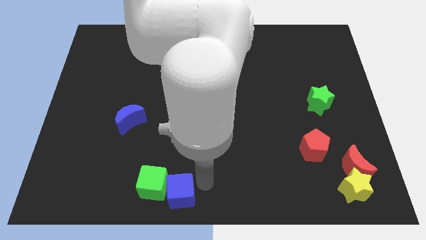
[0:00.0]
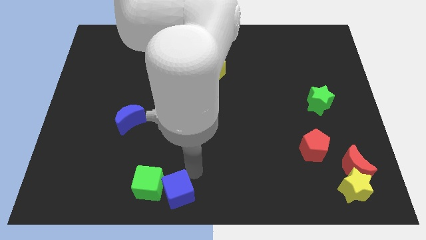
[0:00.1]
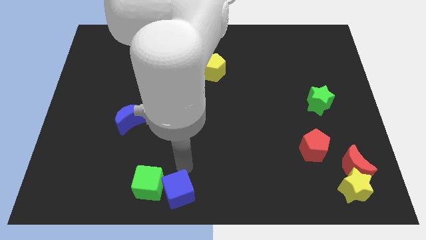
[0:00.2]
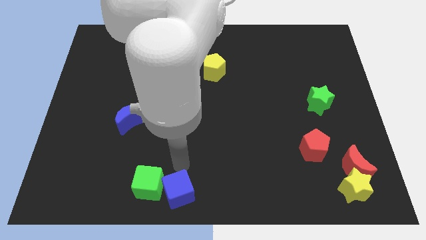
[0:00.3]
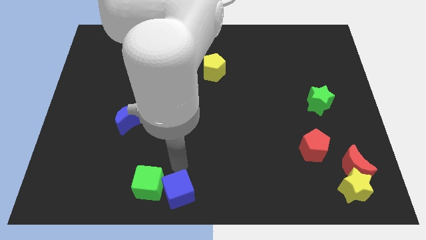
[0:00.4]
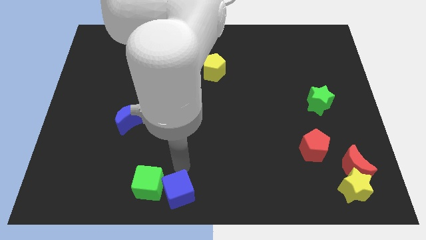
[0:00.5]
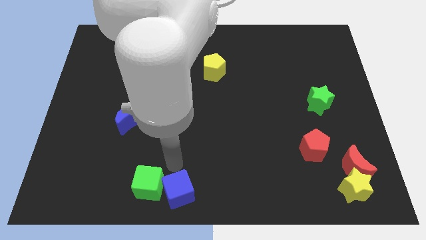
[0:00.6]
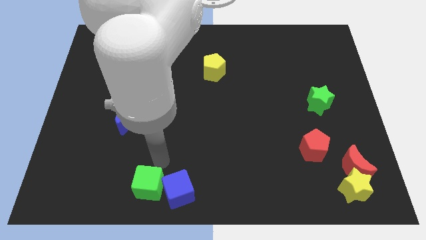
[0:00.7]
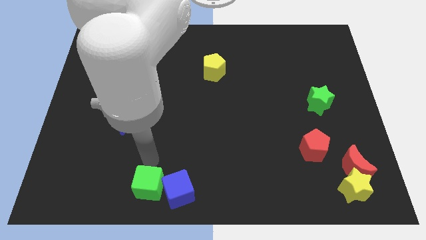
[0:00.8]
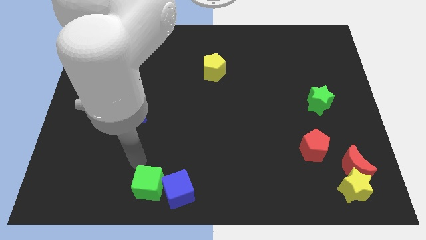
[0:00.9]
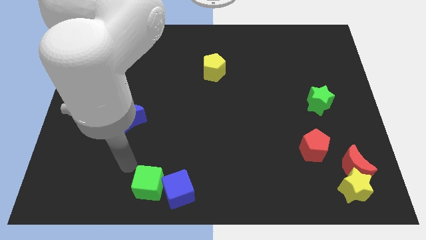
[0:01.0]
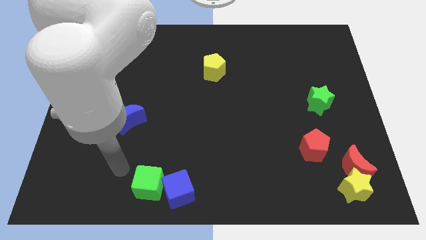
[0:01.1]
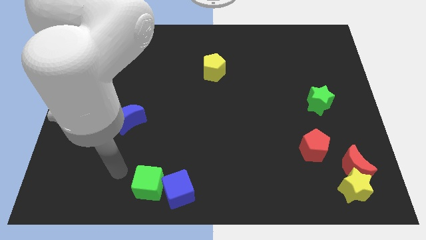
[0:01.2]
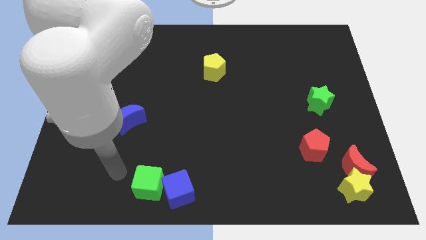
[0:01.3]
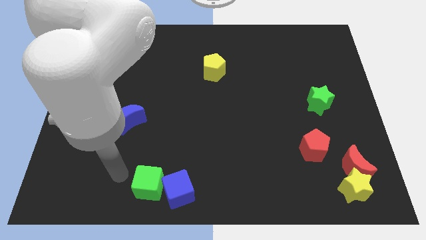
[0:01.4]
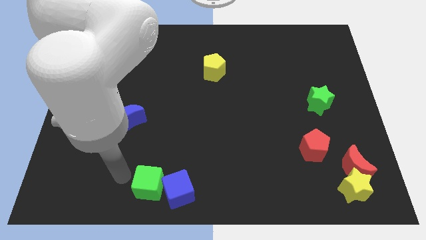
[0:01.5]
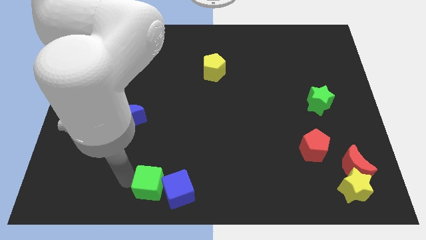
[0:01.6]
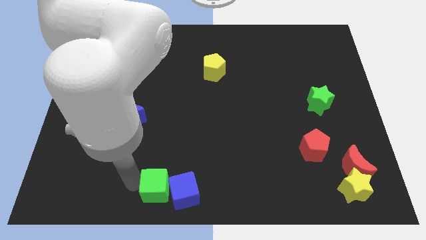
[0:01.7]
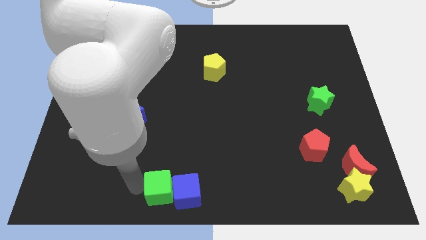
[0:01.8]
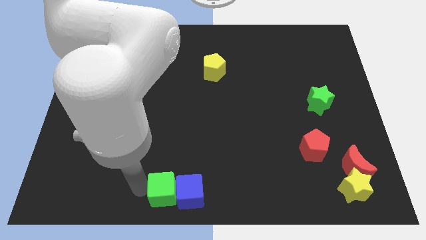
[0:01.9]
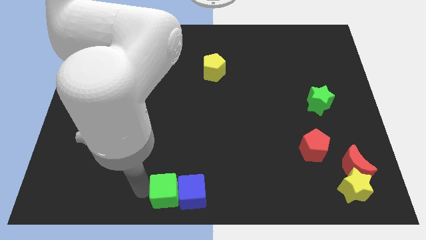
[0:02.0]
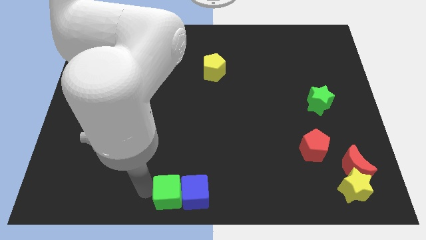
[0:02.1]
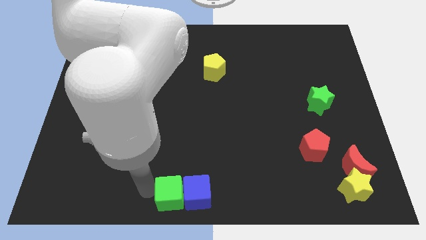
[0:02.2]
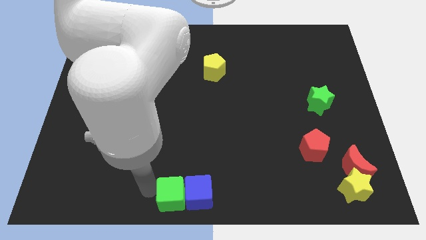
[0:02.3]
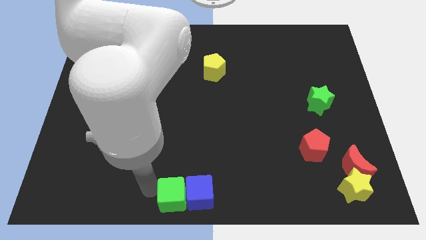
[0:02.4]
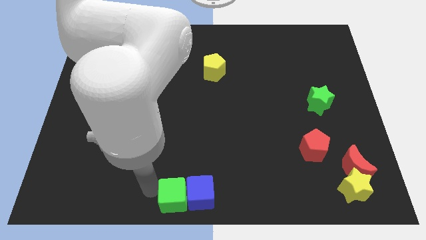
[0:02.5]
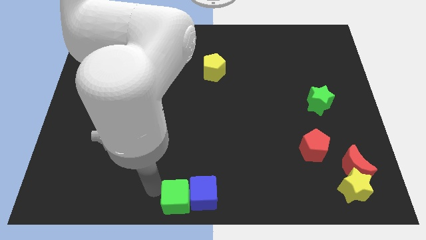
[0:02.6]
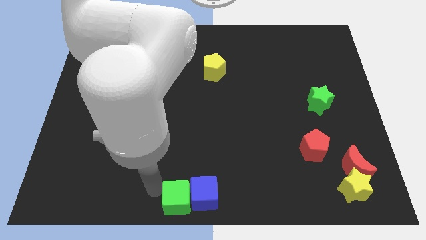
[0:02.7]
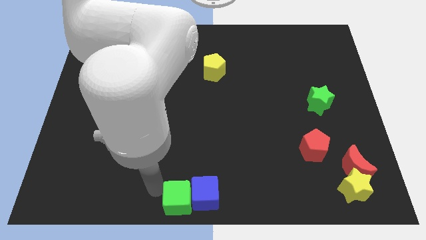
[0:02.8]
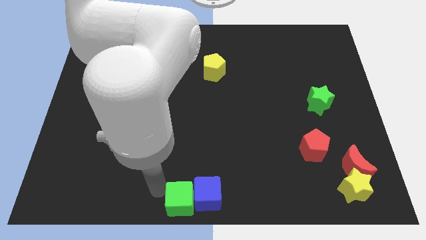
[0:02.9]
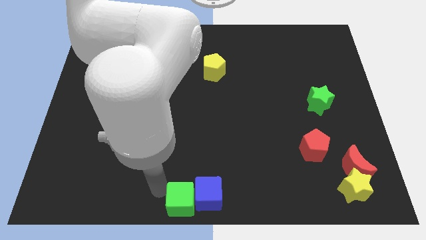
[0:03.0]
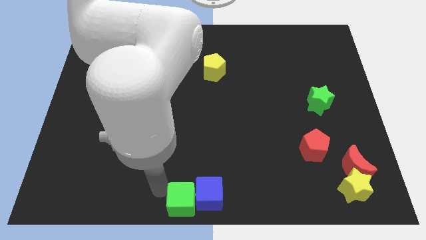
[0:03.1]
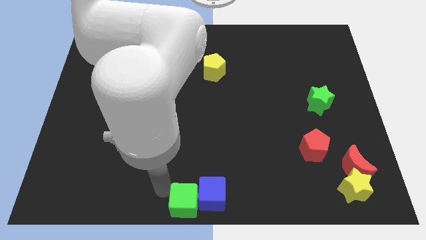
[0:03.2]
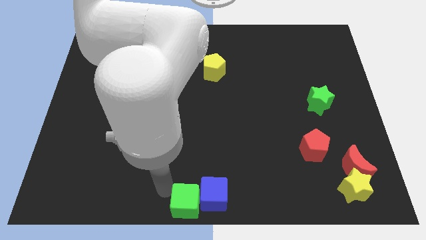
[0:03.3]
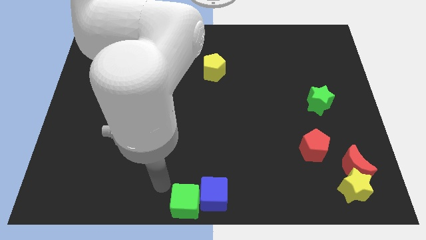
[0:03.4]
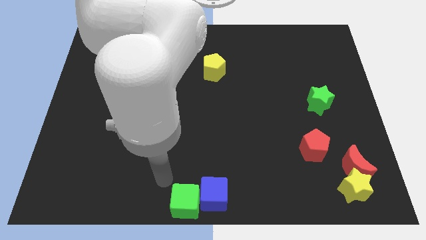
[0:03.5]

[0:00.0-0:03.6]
place green cube and blue cube at the bottom center

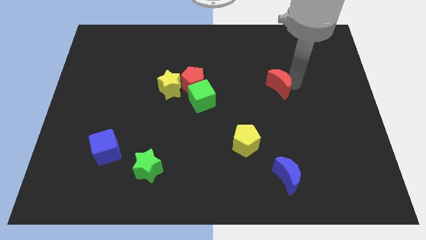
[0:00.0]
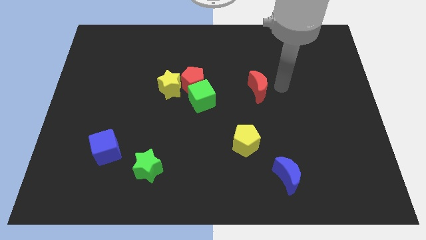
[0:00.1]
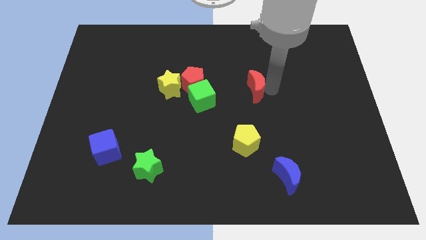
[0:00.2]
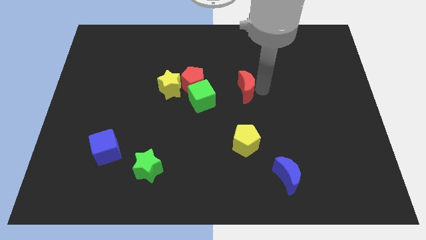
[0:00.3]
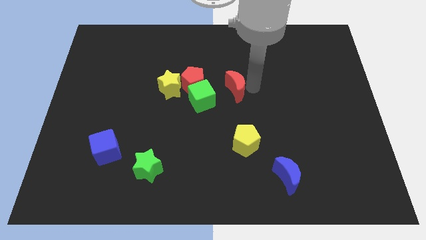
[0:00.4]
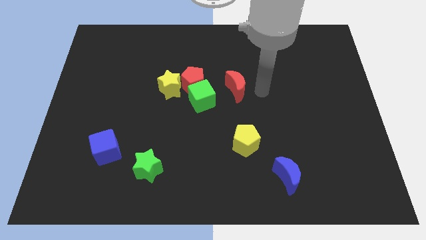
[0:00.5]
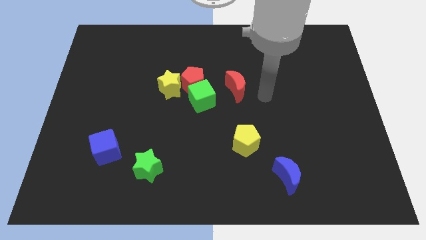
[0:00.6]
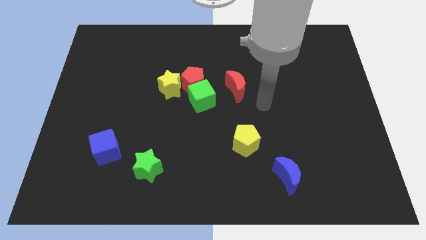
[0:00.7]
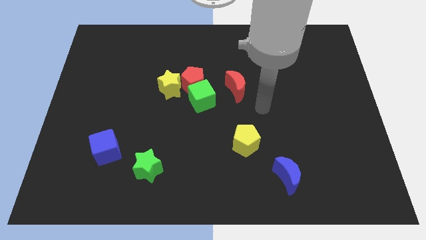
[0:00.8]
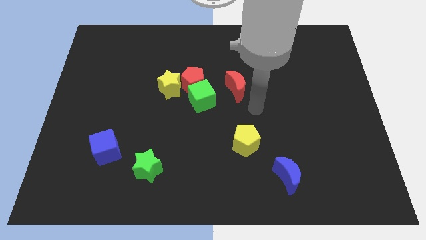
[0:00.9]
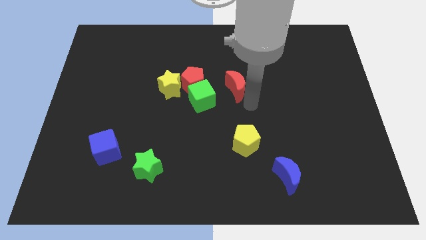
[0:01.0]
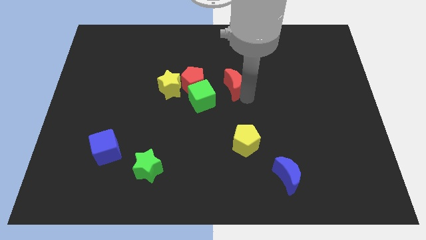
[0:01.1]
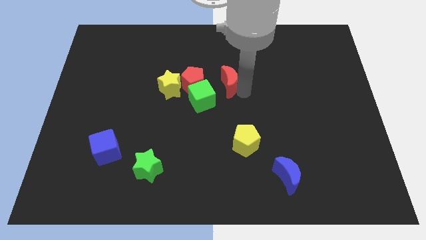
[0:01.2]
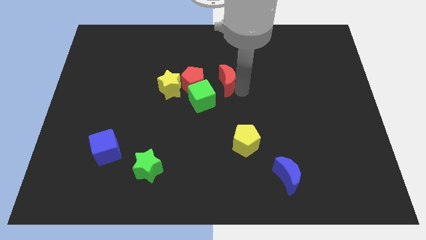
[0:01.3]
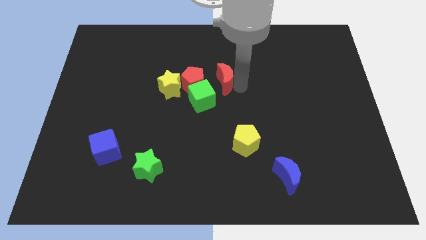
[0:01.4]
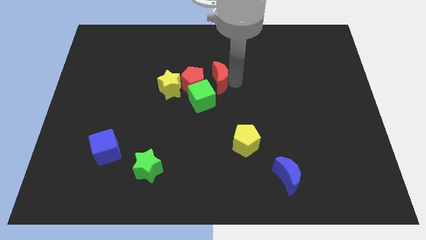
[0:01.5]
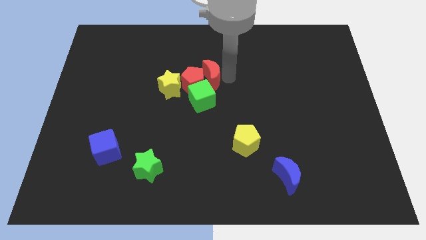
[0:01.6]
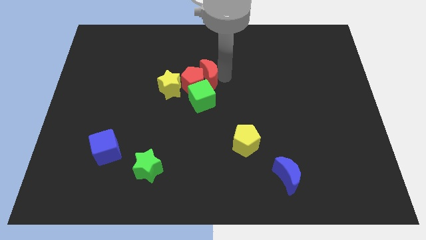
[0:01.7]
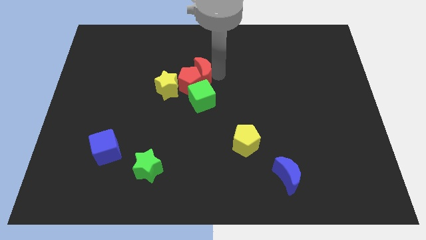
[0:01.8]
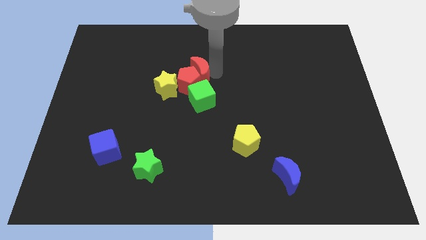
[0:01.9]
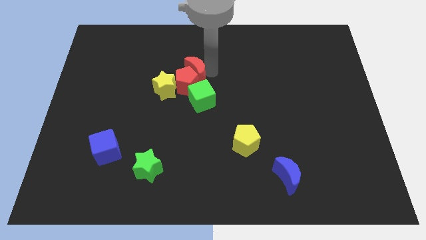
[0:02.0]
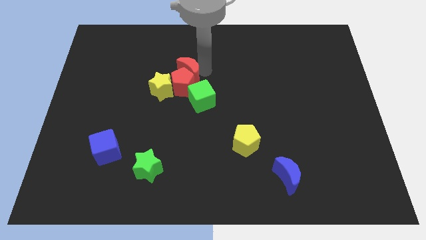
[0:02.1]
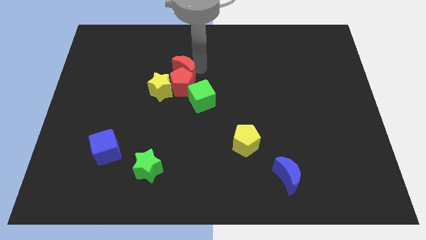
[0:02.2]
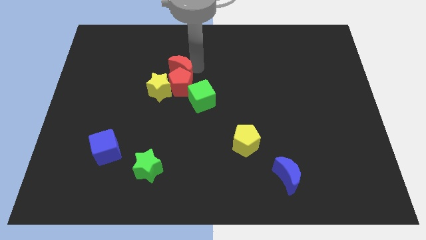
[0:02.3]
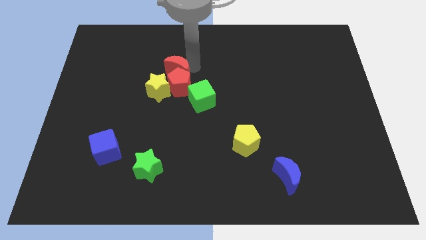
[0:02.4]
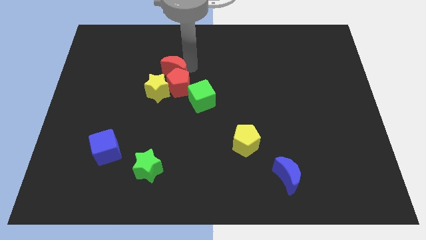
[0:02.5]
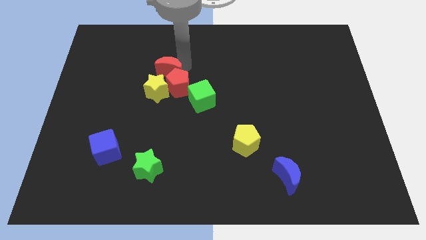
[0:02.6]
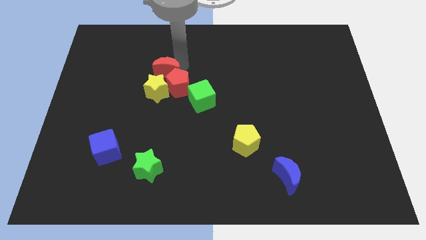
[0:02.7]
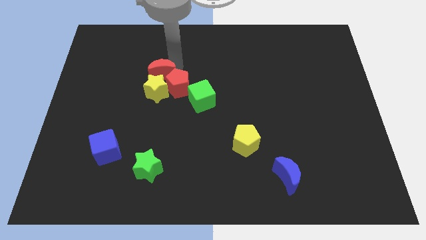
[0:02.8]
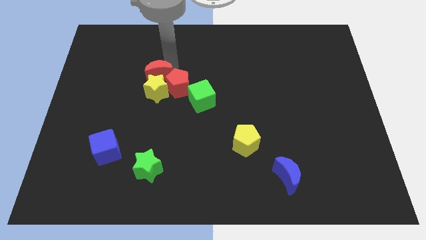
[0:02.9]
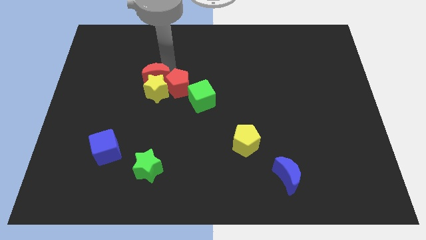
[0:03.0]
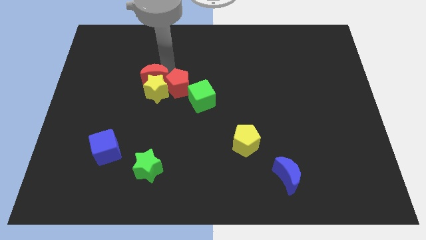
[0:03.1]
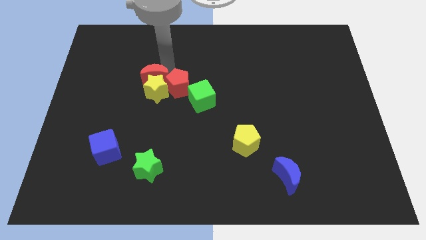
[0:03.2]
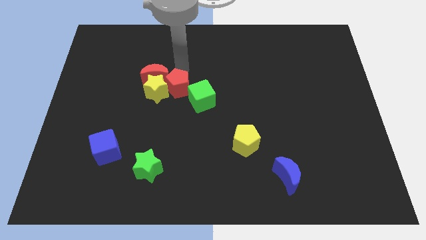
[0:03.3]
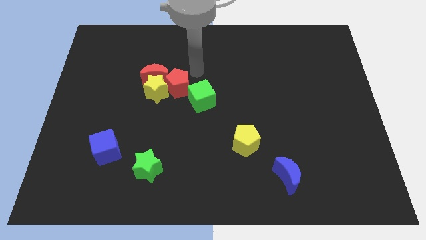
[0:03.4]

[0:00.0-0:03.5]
move the red moon above the yellow star

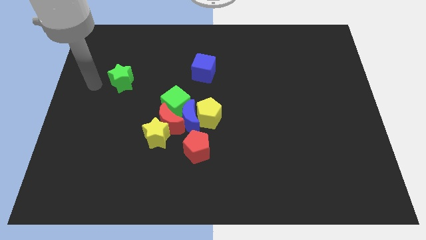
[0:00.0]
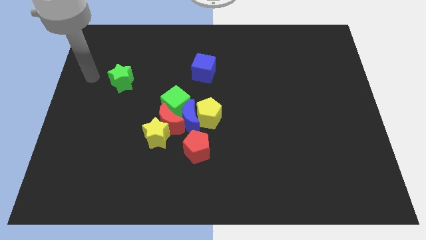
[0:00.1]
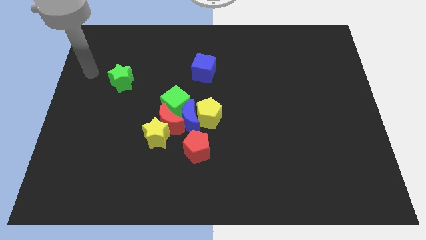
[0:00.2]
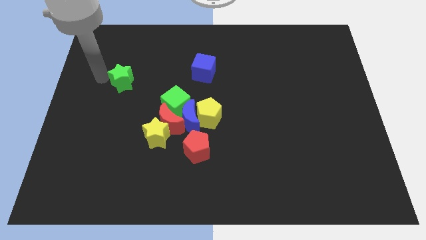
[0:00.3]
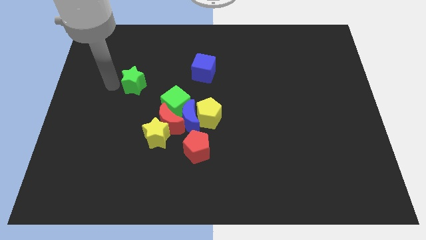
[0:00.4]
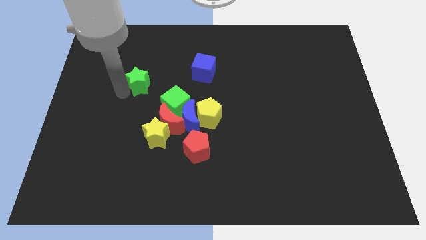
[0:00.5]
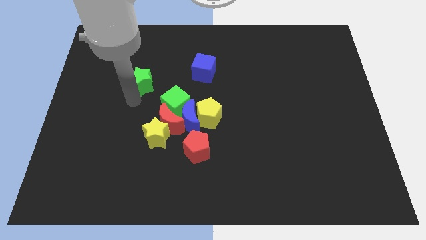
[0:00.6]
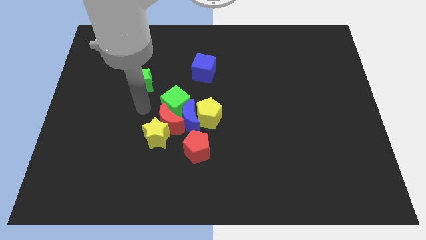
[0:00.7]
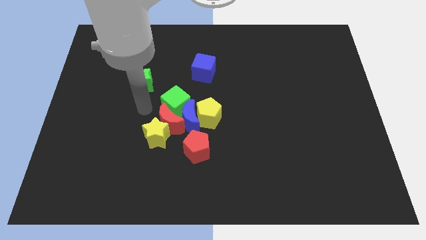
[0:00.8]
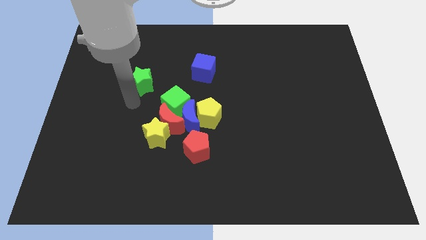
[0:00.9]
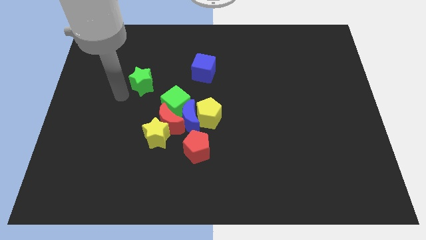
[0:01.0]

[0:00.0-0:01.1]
push the green star towards green cube

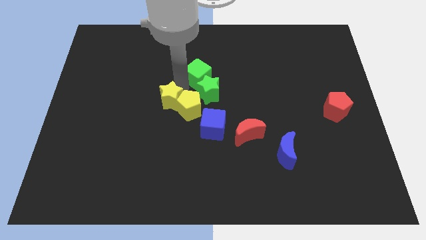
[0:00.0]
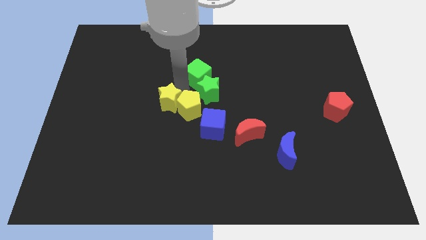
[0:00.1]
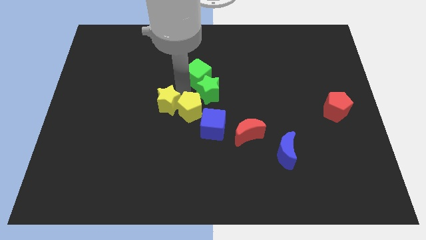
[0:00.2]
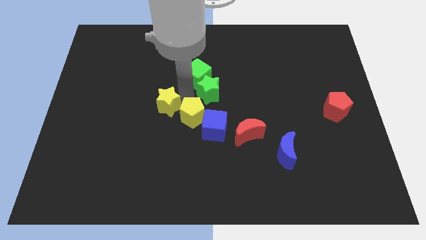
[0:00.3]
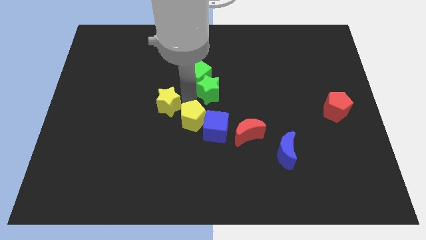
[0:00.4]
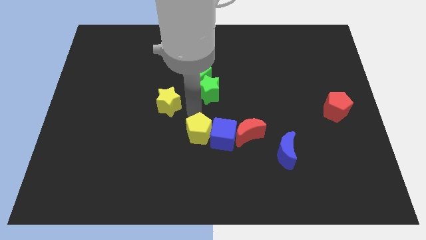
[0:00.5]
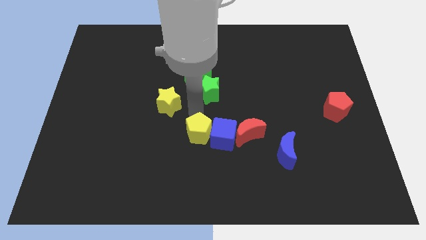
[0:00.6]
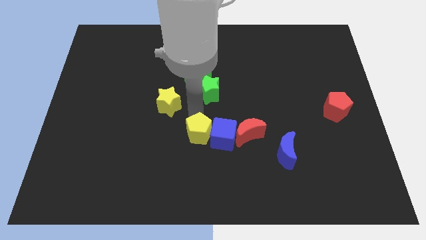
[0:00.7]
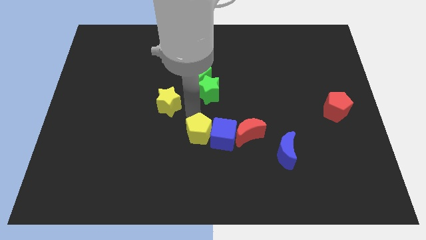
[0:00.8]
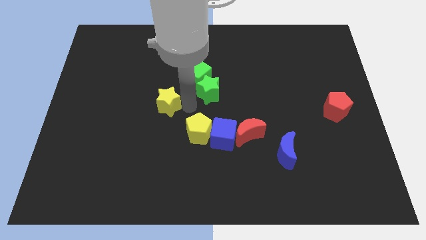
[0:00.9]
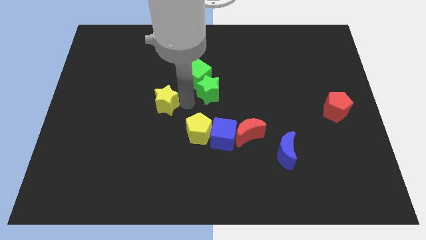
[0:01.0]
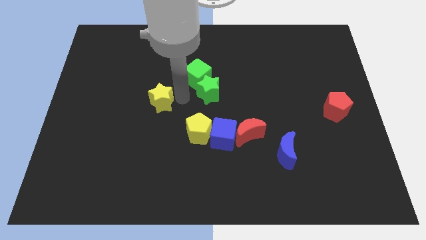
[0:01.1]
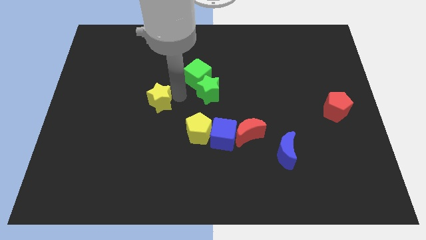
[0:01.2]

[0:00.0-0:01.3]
separate the yellow blocks
